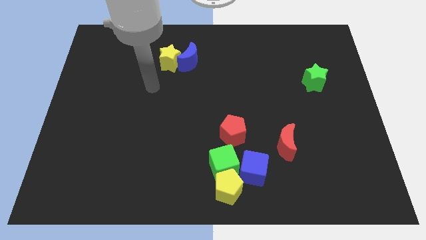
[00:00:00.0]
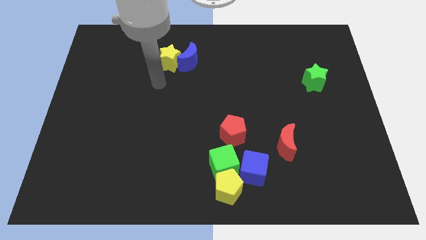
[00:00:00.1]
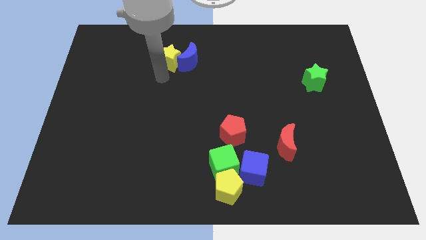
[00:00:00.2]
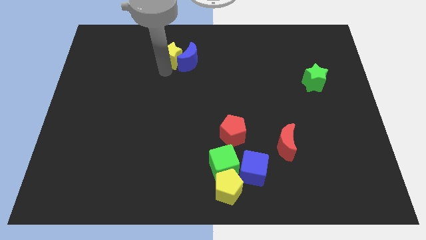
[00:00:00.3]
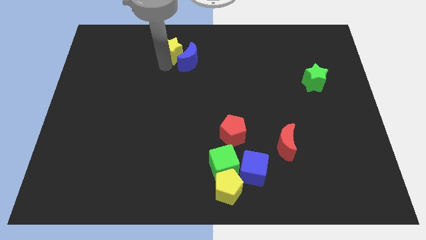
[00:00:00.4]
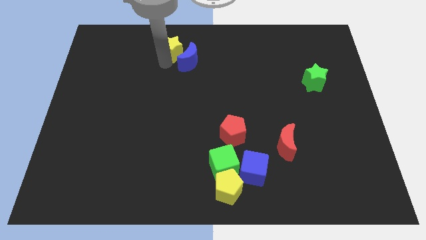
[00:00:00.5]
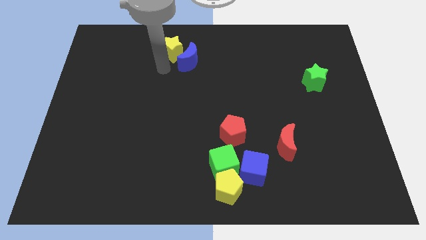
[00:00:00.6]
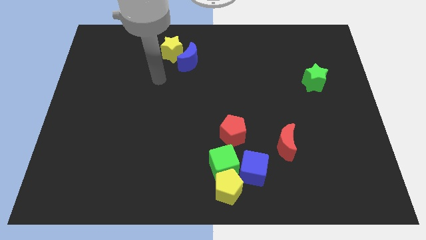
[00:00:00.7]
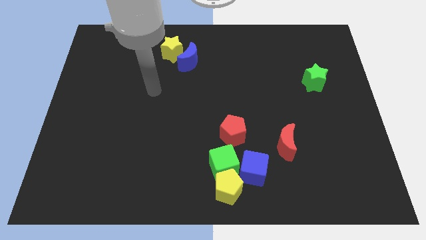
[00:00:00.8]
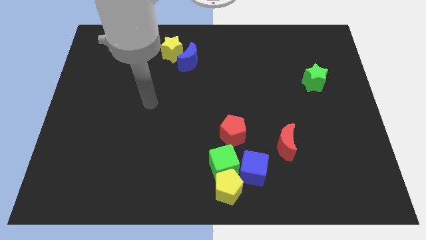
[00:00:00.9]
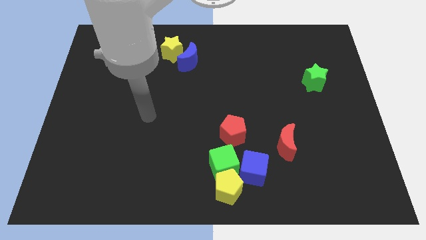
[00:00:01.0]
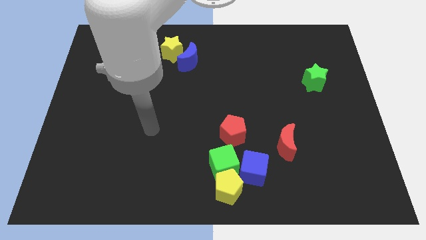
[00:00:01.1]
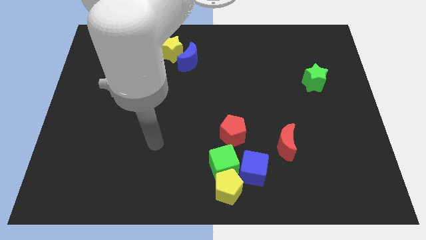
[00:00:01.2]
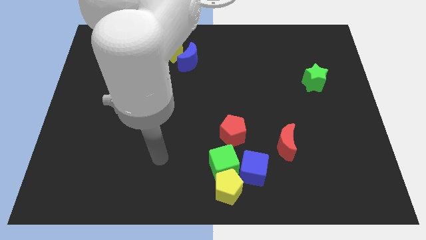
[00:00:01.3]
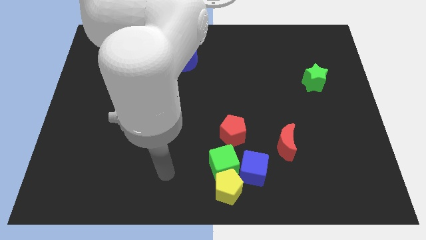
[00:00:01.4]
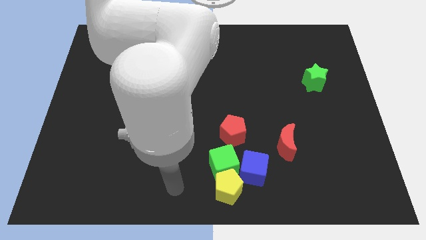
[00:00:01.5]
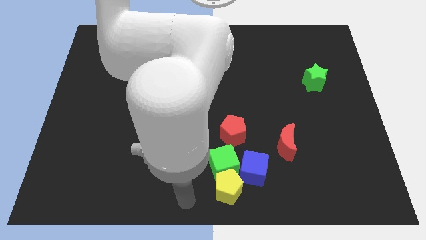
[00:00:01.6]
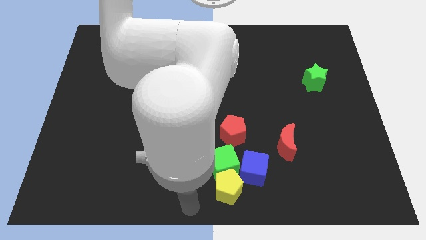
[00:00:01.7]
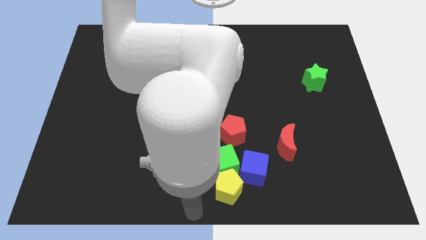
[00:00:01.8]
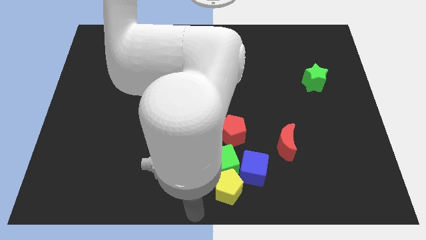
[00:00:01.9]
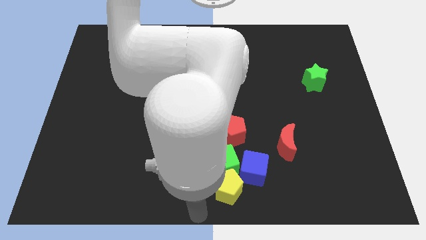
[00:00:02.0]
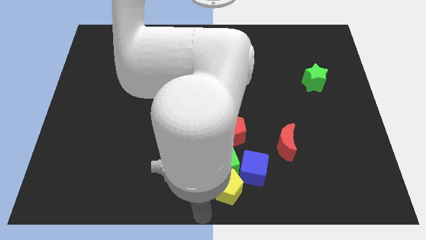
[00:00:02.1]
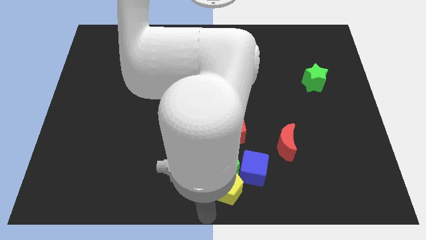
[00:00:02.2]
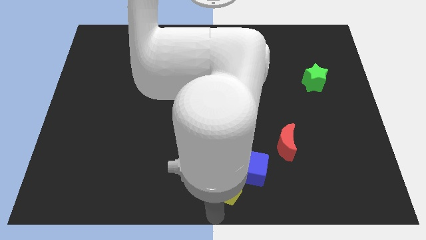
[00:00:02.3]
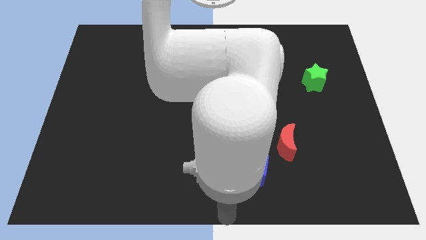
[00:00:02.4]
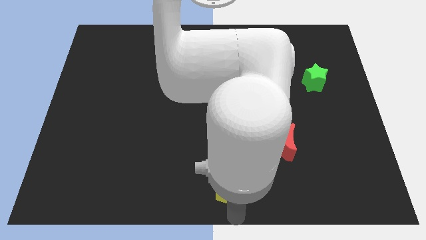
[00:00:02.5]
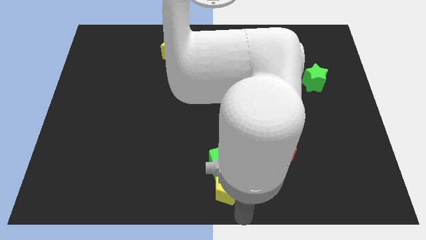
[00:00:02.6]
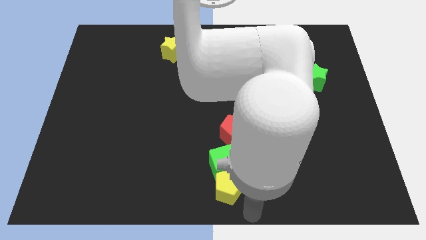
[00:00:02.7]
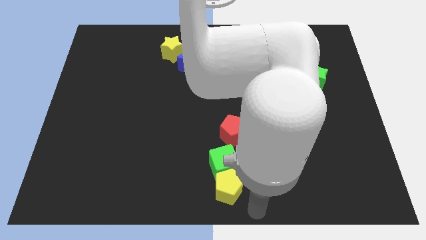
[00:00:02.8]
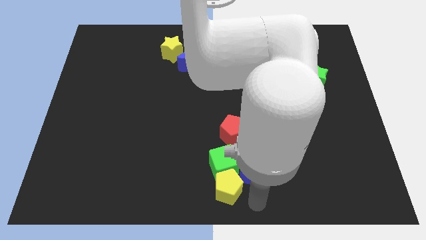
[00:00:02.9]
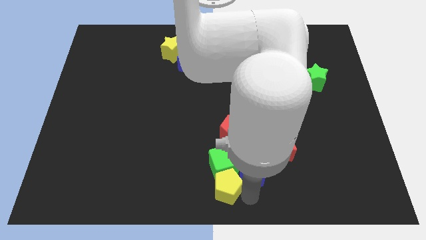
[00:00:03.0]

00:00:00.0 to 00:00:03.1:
go and touch the right of the yellow pentagon

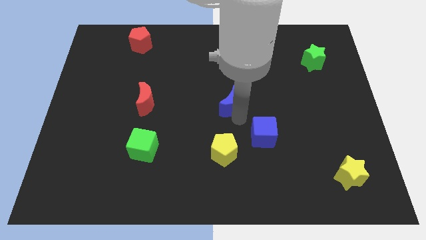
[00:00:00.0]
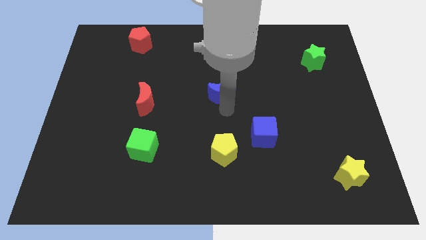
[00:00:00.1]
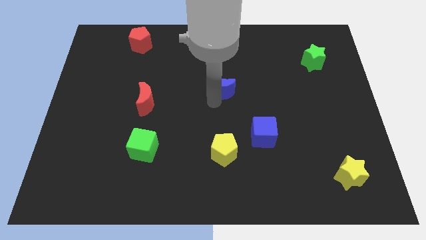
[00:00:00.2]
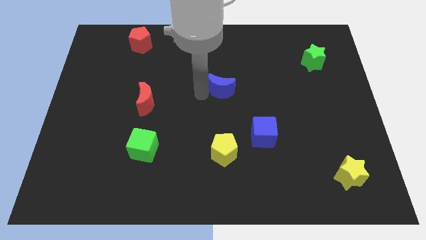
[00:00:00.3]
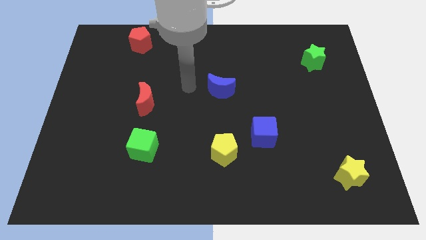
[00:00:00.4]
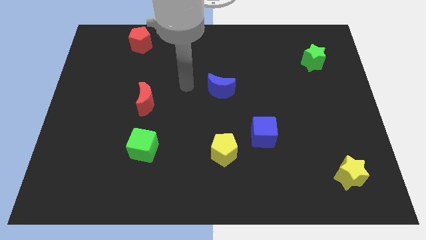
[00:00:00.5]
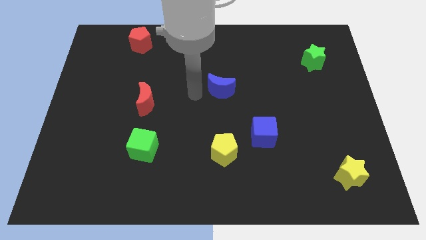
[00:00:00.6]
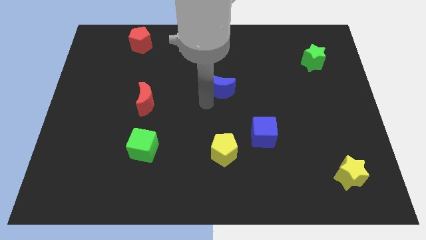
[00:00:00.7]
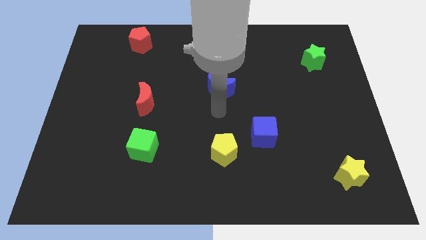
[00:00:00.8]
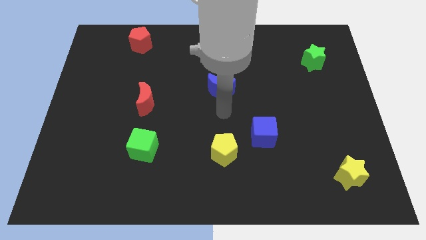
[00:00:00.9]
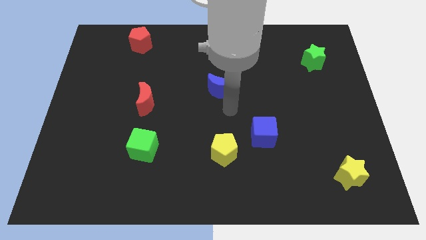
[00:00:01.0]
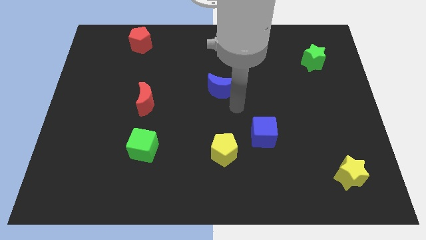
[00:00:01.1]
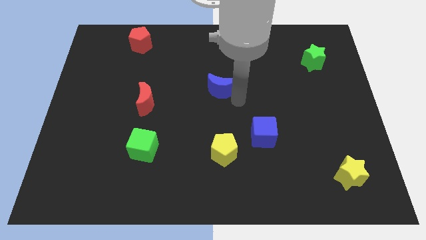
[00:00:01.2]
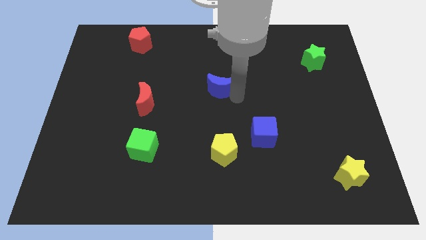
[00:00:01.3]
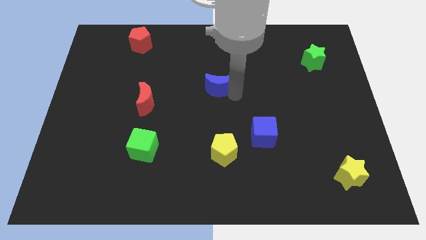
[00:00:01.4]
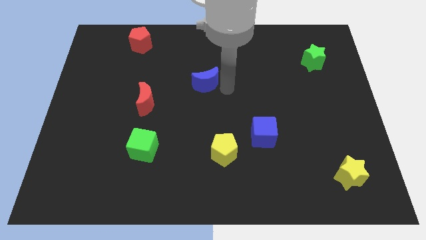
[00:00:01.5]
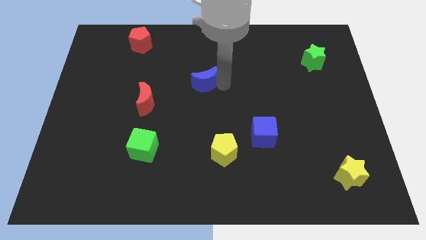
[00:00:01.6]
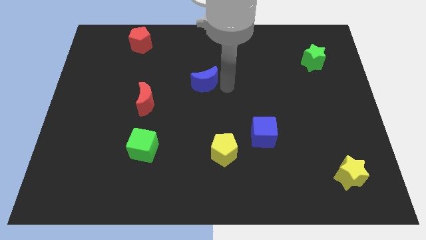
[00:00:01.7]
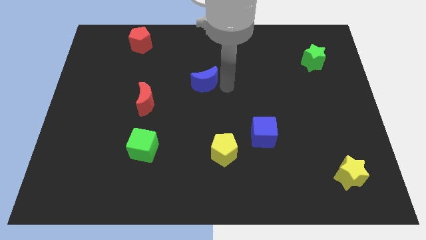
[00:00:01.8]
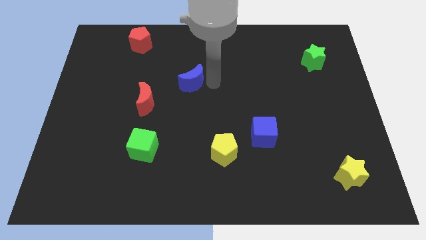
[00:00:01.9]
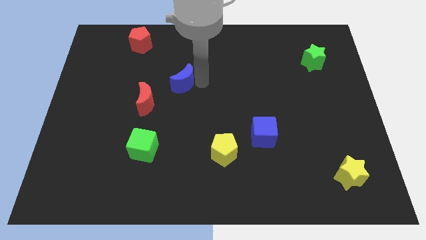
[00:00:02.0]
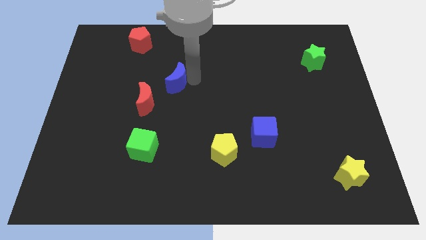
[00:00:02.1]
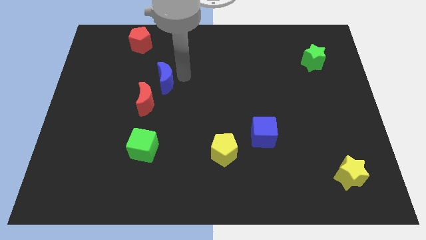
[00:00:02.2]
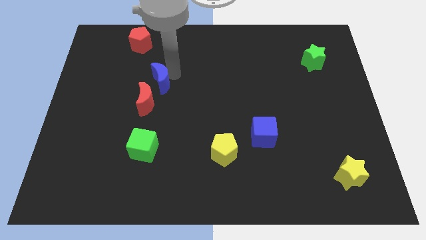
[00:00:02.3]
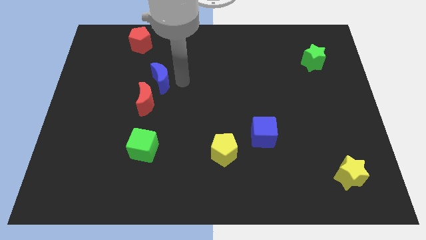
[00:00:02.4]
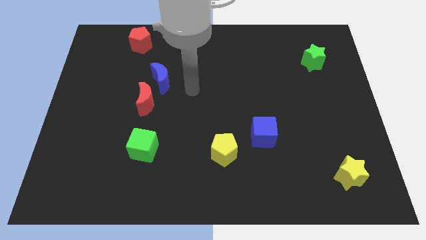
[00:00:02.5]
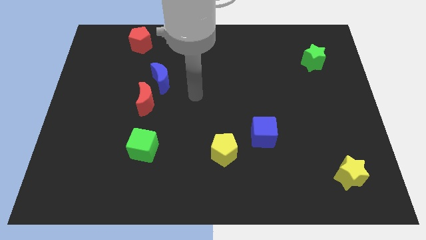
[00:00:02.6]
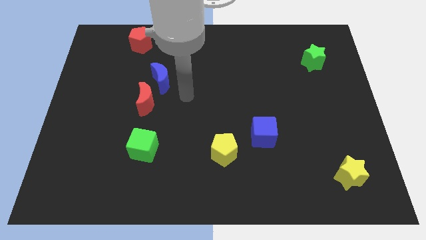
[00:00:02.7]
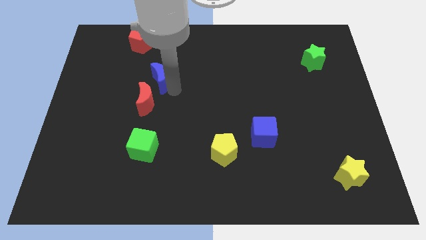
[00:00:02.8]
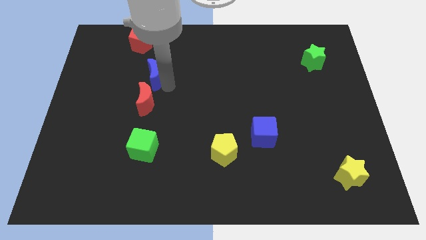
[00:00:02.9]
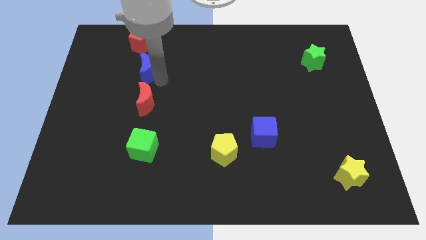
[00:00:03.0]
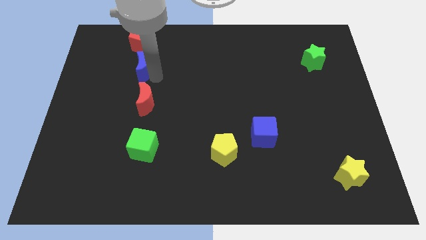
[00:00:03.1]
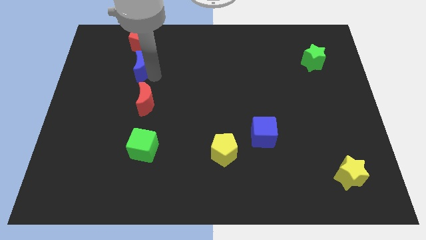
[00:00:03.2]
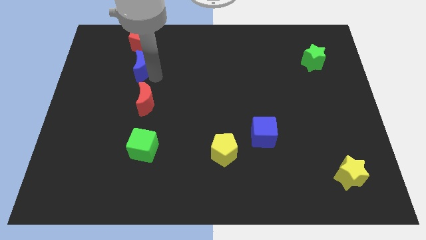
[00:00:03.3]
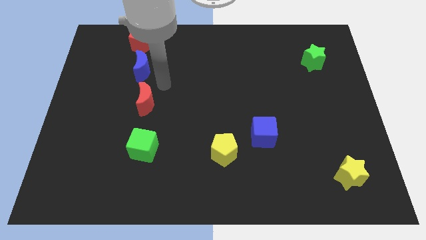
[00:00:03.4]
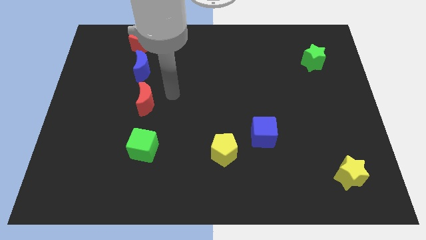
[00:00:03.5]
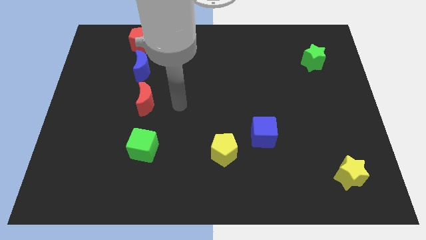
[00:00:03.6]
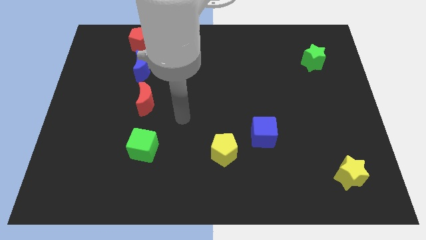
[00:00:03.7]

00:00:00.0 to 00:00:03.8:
move the blue crescent in between the red blocks

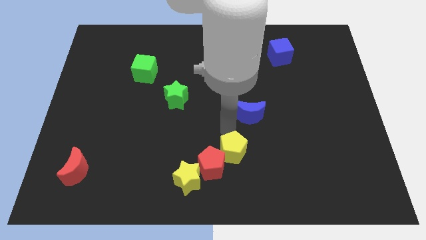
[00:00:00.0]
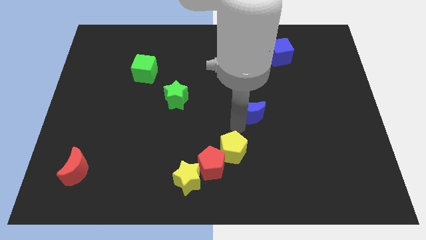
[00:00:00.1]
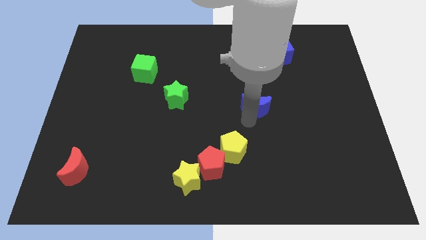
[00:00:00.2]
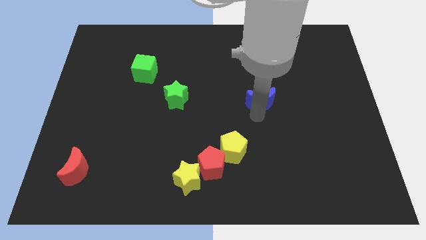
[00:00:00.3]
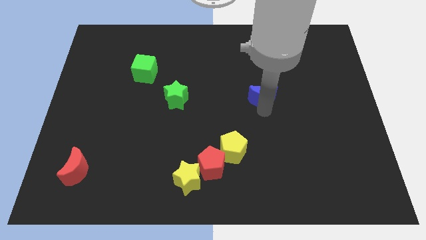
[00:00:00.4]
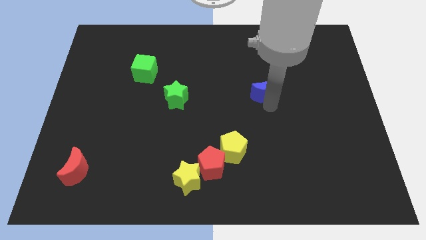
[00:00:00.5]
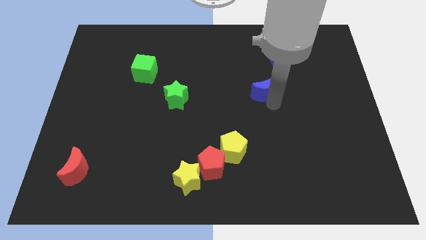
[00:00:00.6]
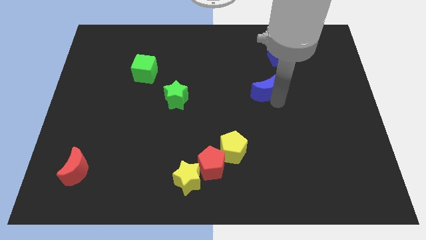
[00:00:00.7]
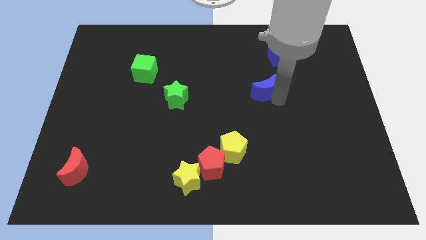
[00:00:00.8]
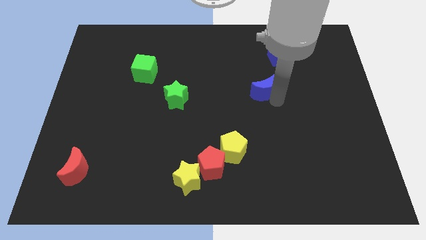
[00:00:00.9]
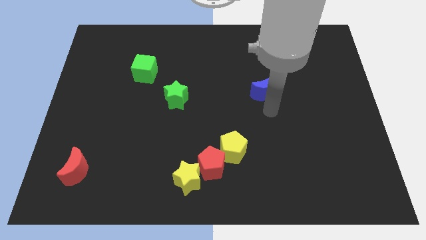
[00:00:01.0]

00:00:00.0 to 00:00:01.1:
drag the blue moon away from the yellow pentagon

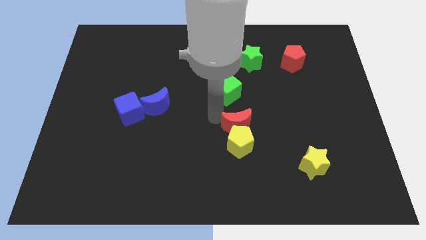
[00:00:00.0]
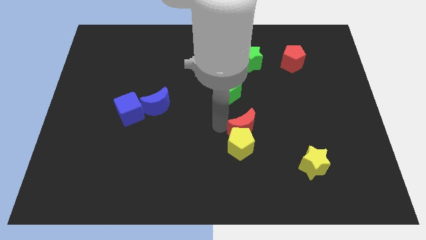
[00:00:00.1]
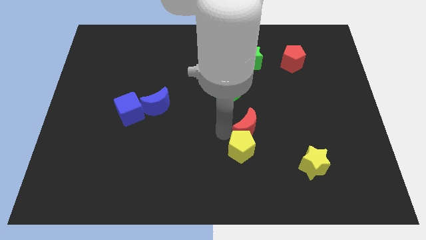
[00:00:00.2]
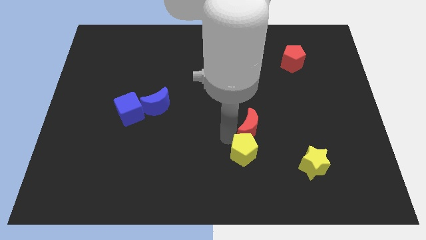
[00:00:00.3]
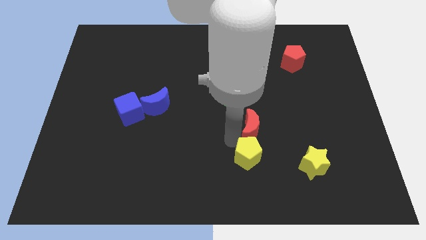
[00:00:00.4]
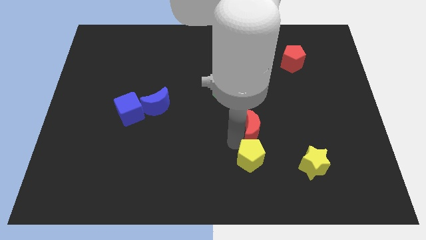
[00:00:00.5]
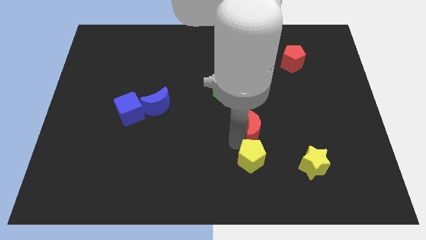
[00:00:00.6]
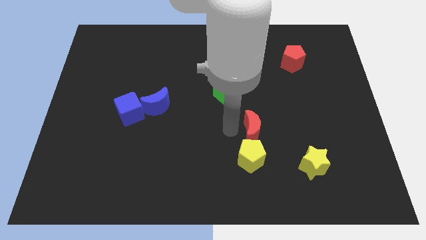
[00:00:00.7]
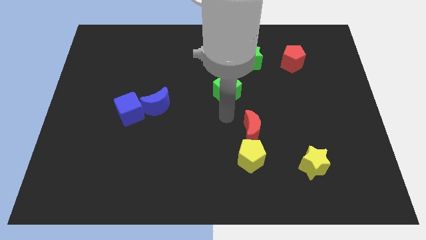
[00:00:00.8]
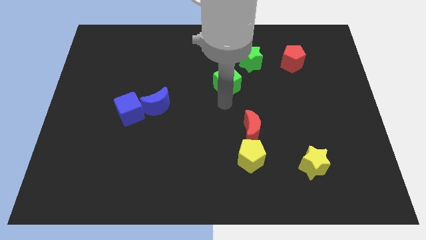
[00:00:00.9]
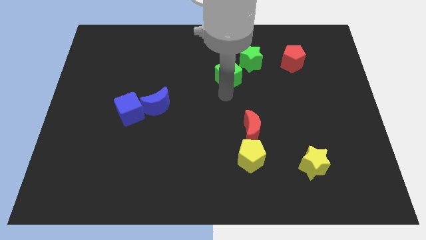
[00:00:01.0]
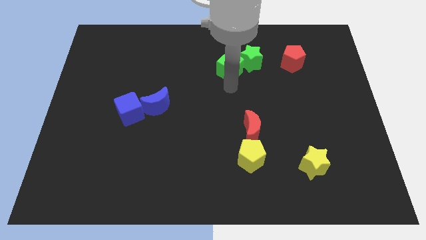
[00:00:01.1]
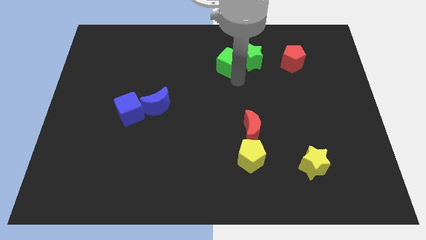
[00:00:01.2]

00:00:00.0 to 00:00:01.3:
push yellow pentagon with the red moon
